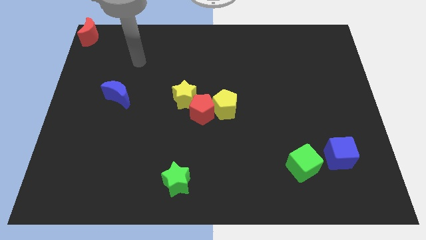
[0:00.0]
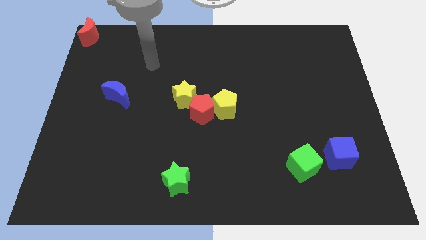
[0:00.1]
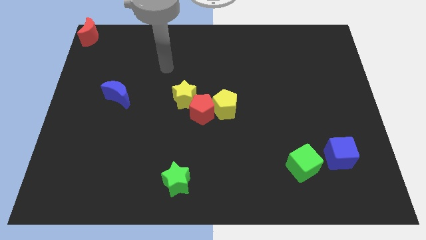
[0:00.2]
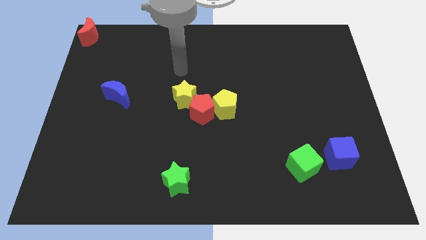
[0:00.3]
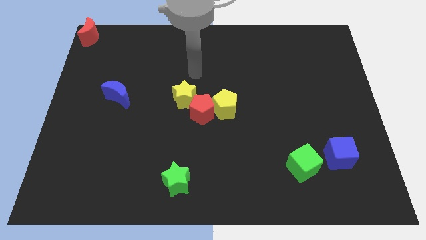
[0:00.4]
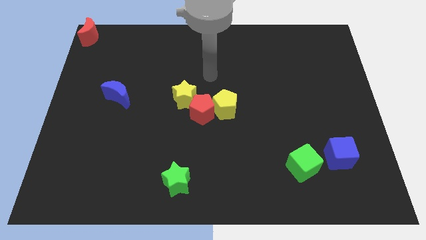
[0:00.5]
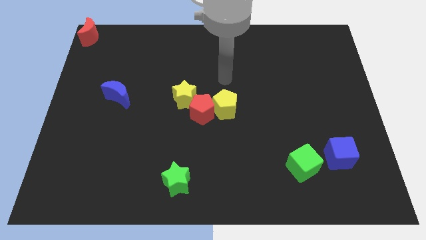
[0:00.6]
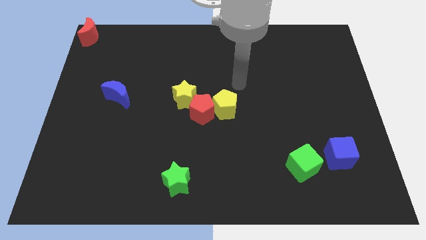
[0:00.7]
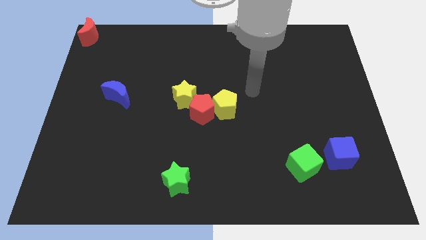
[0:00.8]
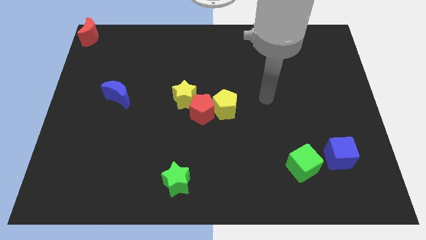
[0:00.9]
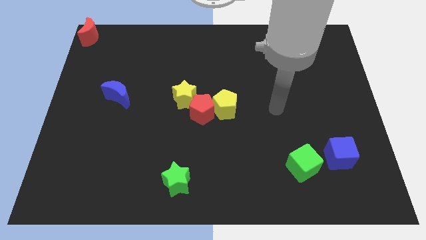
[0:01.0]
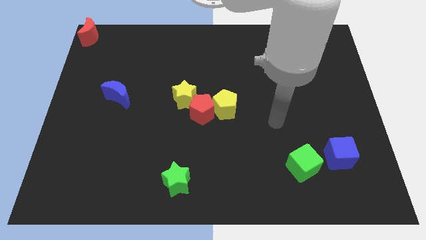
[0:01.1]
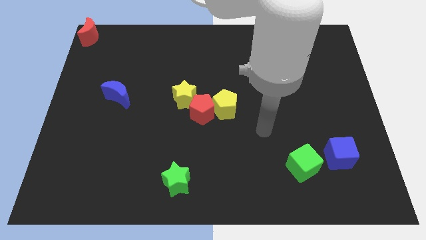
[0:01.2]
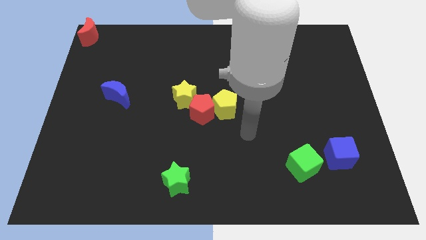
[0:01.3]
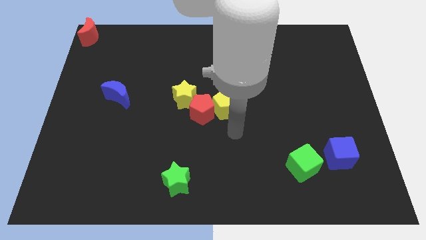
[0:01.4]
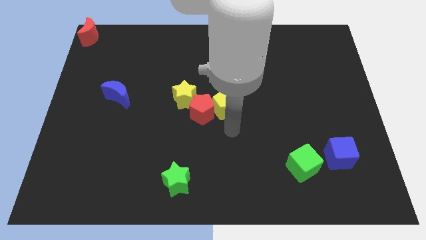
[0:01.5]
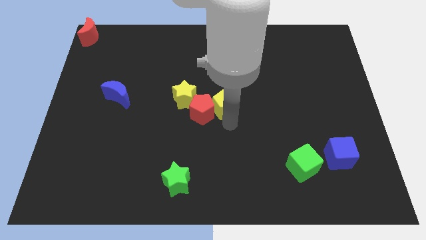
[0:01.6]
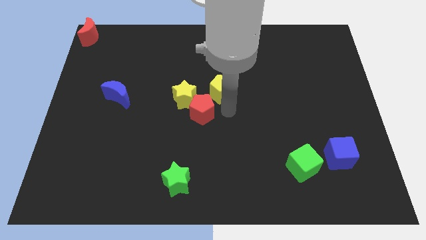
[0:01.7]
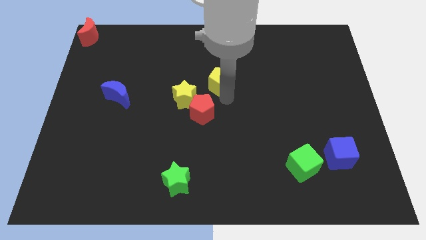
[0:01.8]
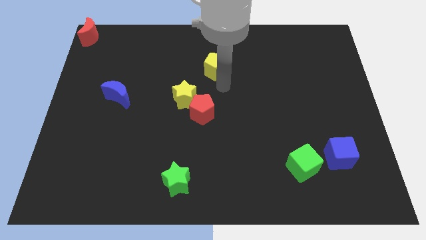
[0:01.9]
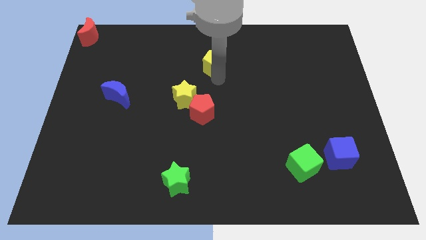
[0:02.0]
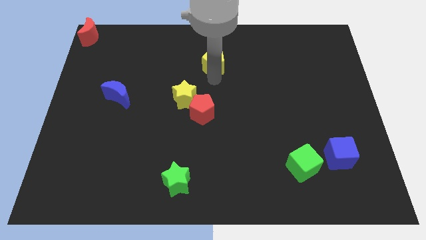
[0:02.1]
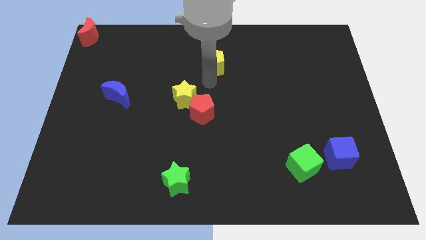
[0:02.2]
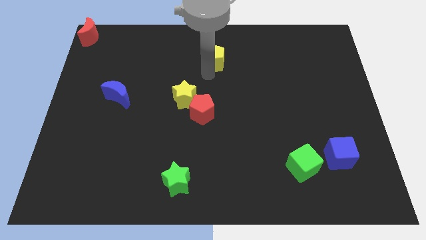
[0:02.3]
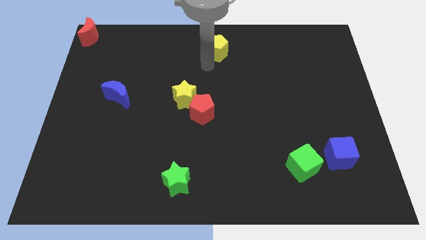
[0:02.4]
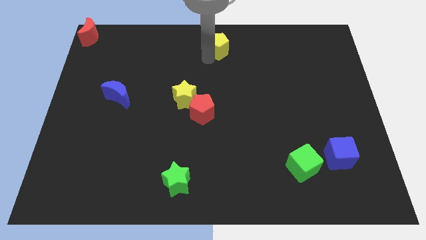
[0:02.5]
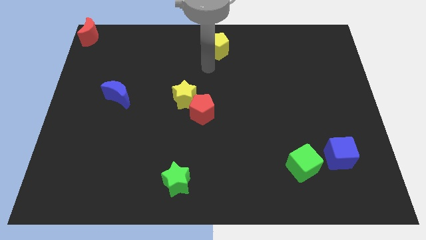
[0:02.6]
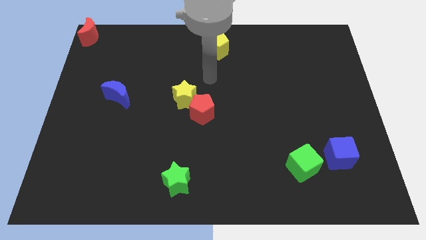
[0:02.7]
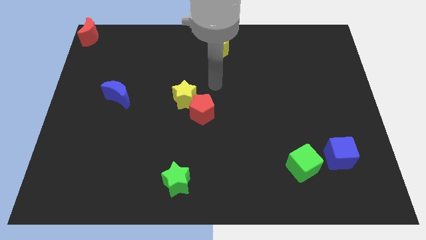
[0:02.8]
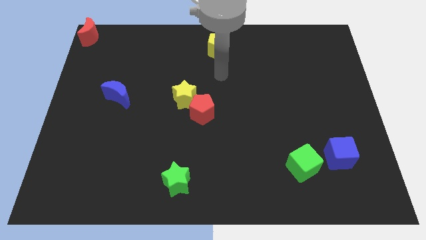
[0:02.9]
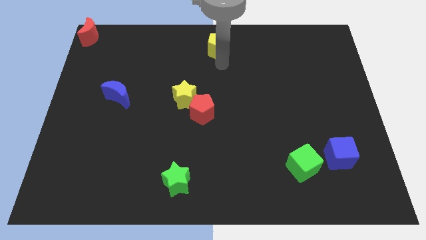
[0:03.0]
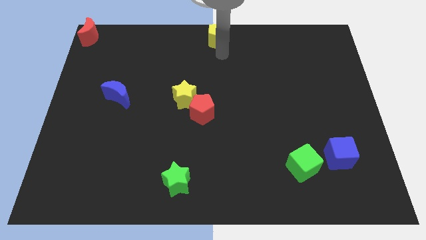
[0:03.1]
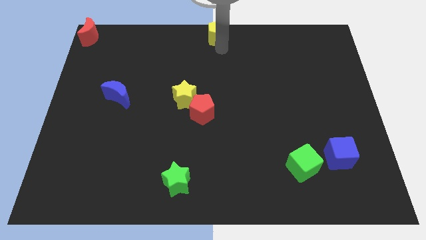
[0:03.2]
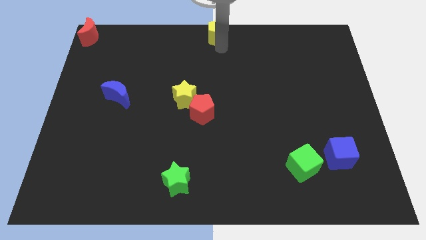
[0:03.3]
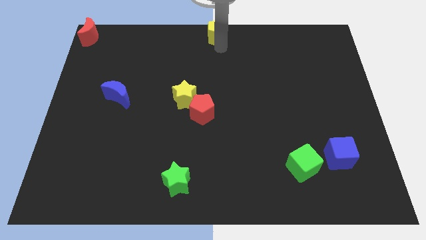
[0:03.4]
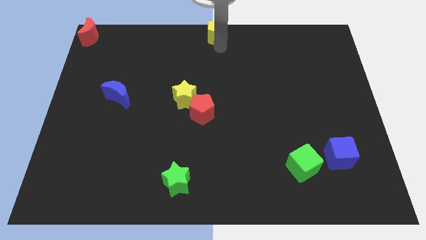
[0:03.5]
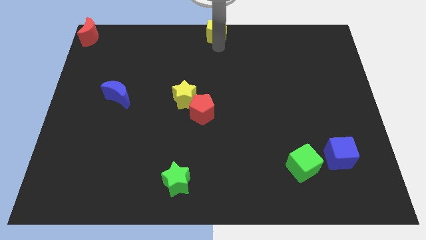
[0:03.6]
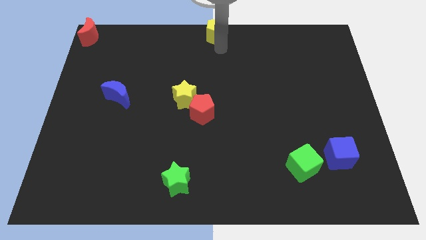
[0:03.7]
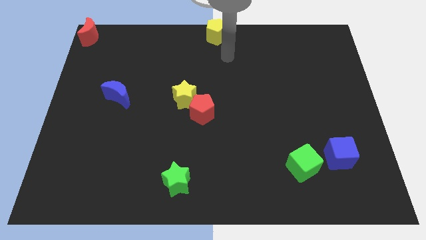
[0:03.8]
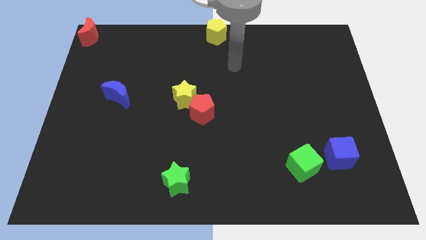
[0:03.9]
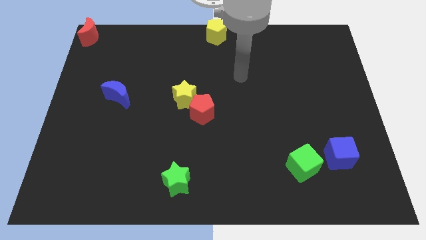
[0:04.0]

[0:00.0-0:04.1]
drag the yellow pentagon to the top center of the board

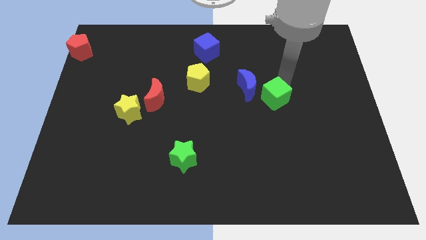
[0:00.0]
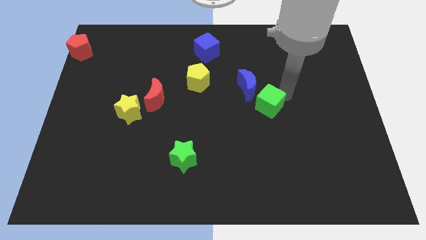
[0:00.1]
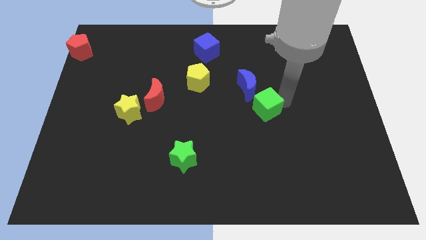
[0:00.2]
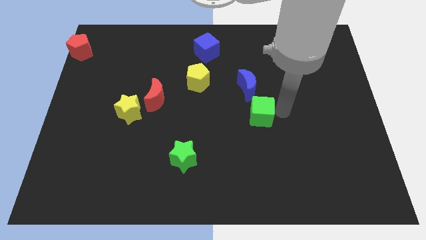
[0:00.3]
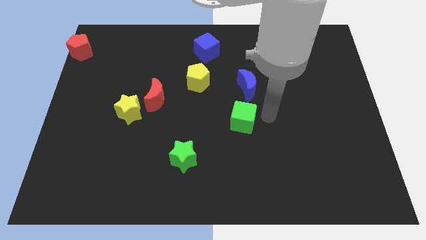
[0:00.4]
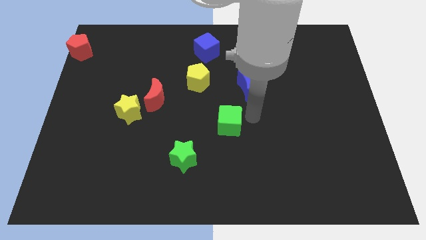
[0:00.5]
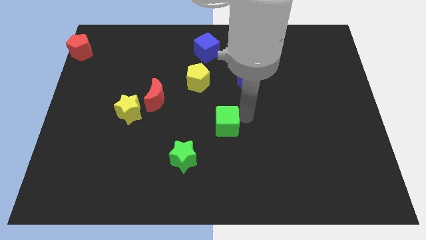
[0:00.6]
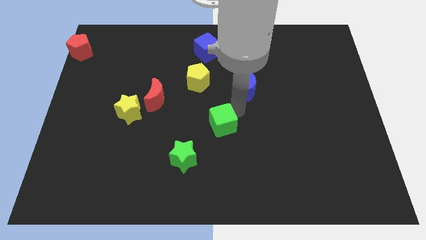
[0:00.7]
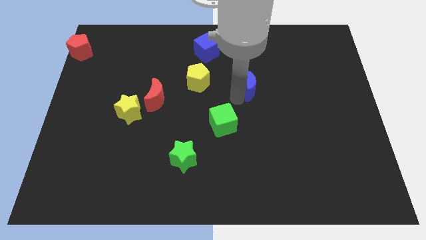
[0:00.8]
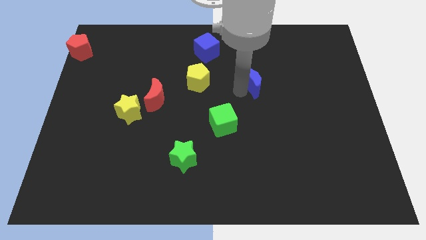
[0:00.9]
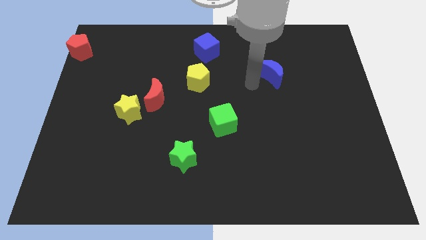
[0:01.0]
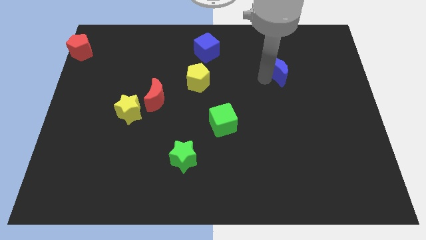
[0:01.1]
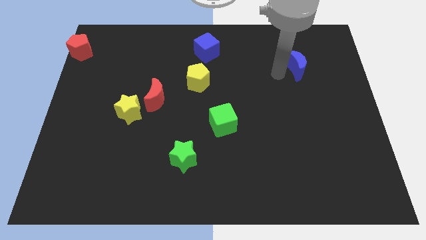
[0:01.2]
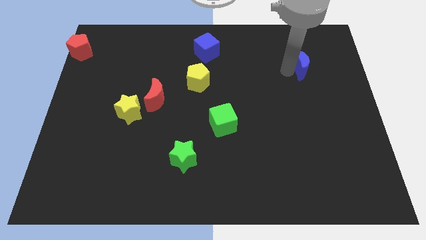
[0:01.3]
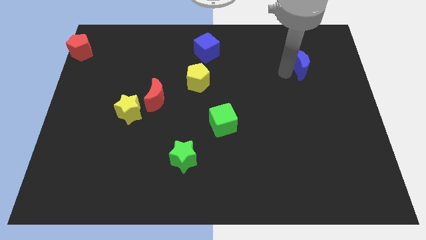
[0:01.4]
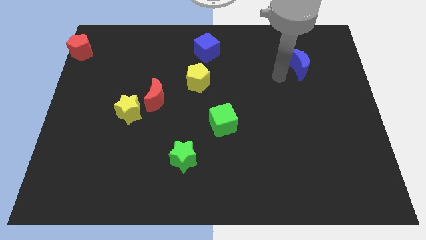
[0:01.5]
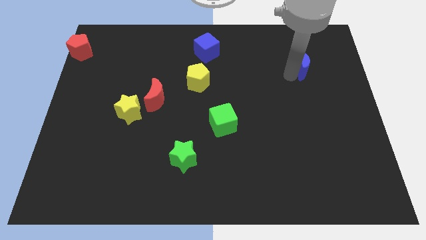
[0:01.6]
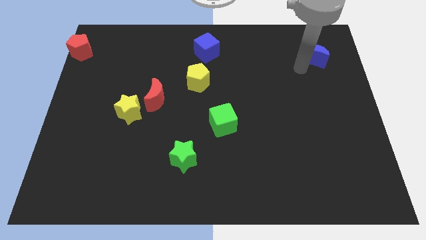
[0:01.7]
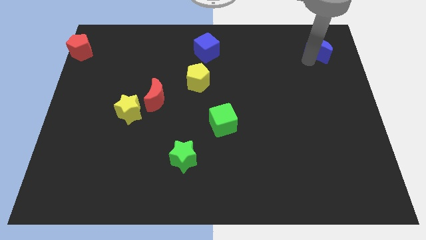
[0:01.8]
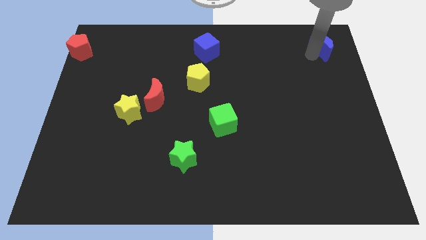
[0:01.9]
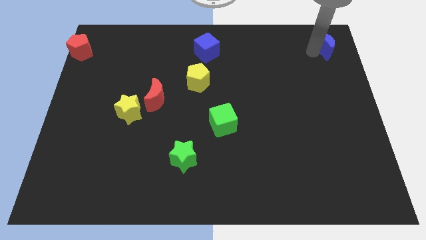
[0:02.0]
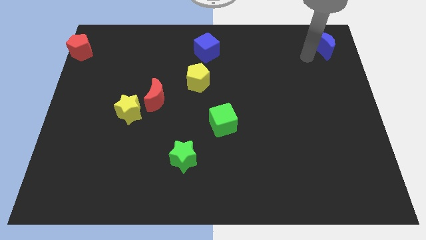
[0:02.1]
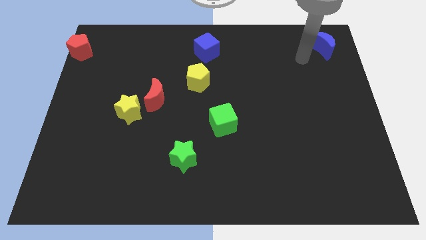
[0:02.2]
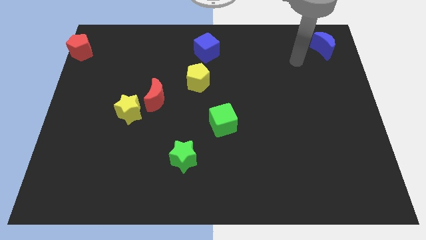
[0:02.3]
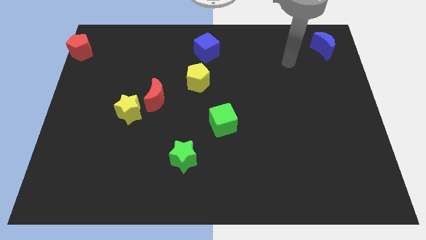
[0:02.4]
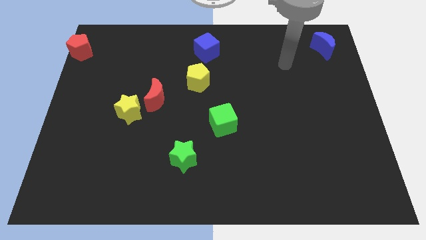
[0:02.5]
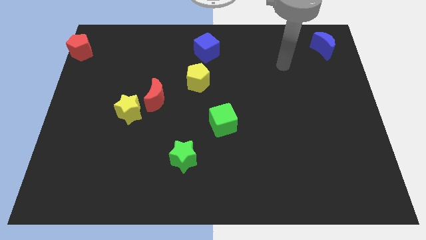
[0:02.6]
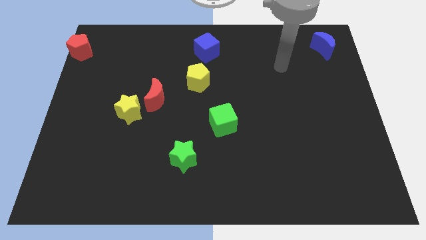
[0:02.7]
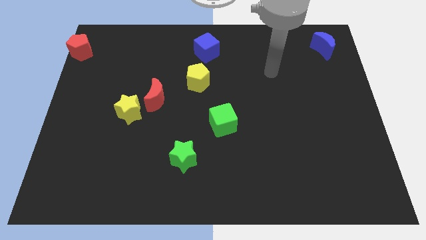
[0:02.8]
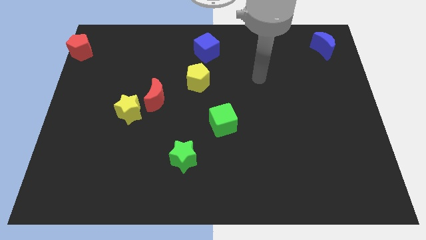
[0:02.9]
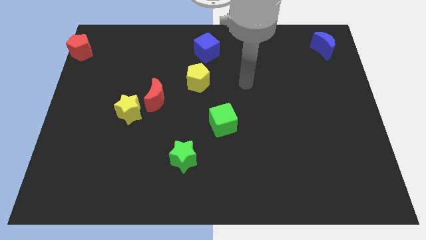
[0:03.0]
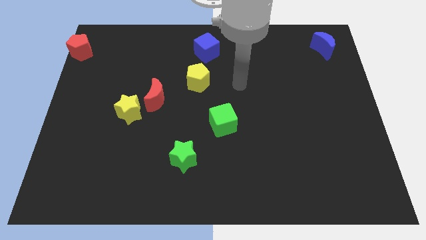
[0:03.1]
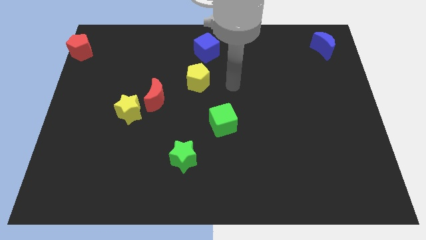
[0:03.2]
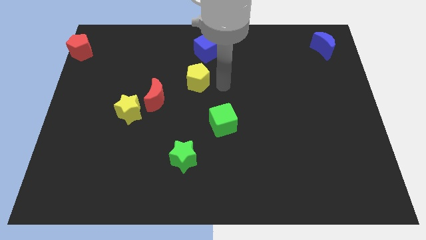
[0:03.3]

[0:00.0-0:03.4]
move blue crescent to the top right corner of the board

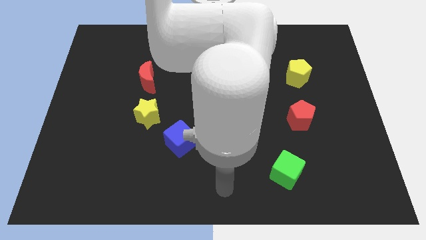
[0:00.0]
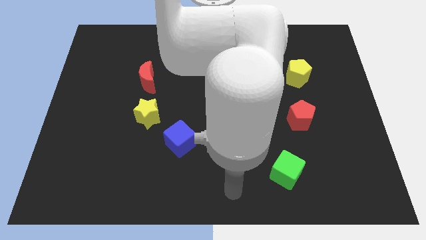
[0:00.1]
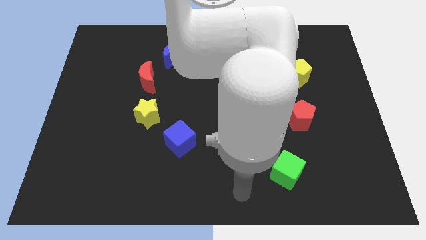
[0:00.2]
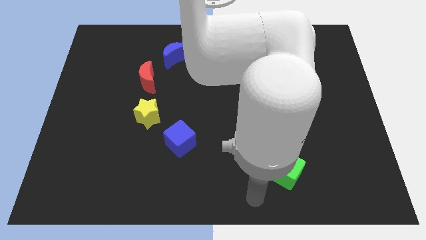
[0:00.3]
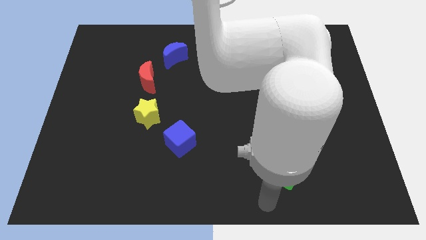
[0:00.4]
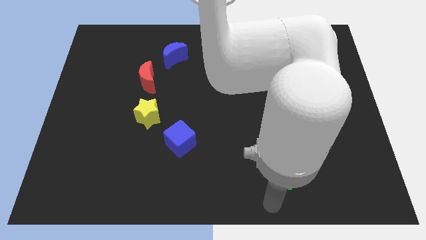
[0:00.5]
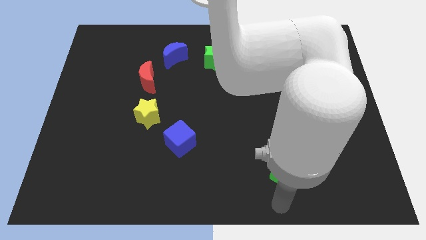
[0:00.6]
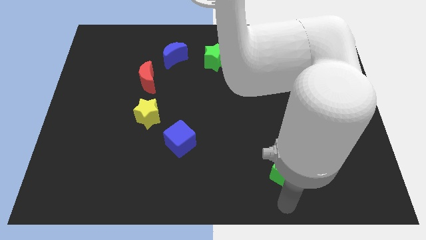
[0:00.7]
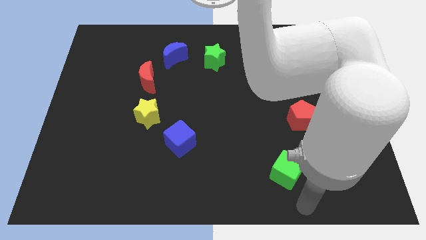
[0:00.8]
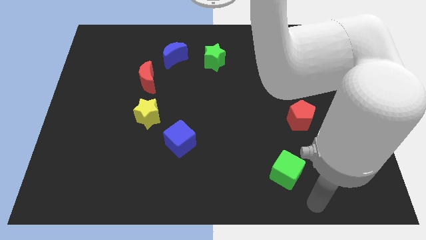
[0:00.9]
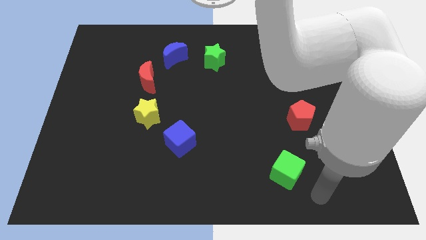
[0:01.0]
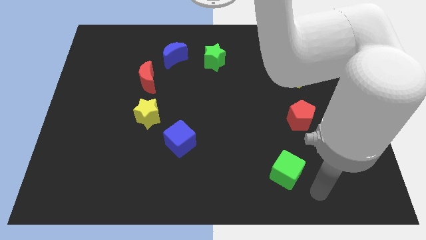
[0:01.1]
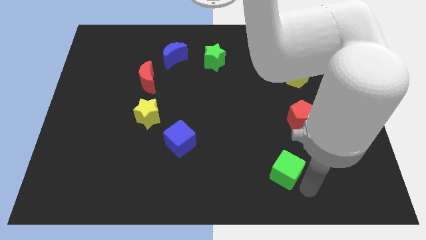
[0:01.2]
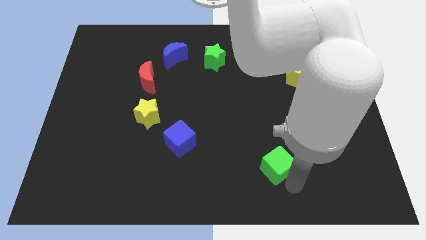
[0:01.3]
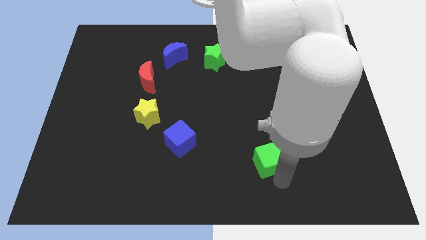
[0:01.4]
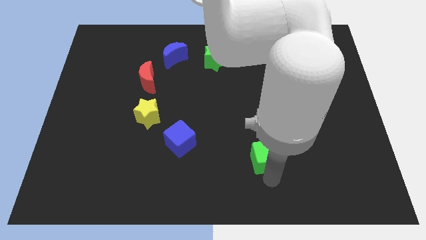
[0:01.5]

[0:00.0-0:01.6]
push the green cube towards the blue cube
